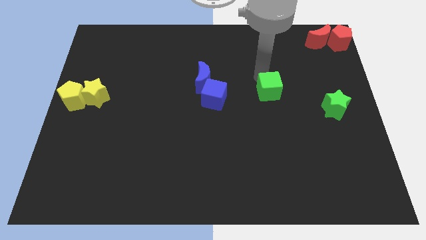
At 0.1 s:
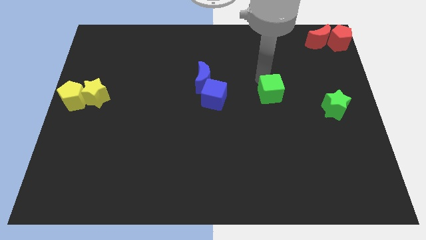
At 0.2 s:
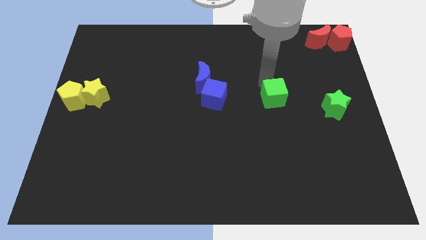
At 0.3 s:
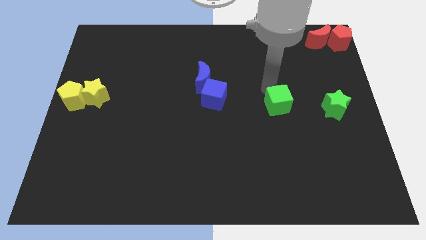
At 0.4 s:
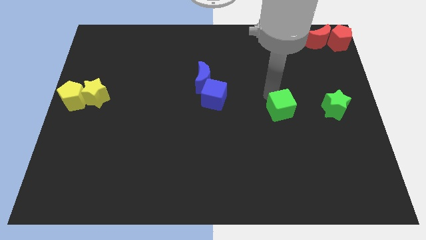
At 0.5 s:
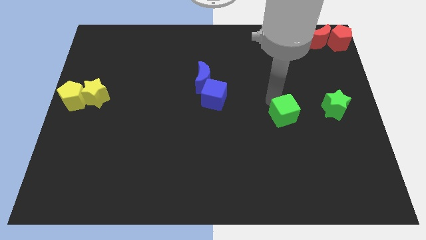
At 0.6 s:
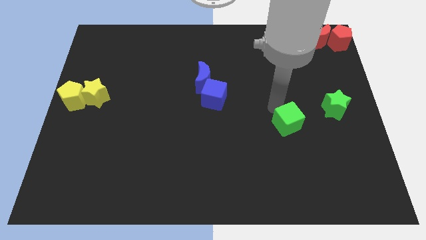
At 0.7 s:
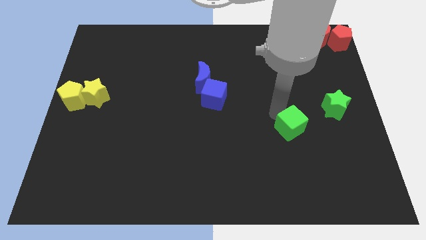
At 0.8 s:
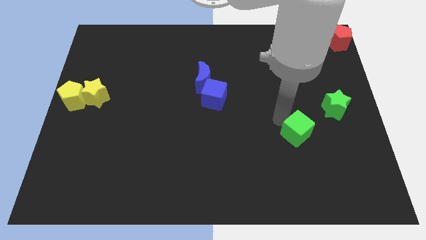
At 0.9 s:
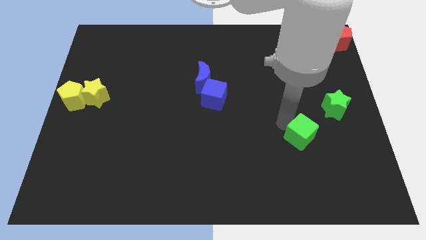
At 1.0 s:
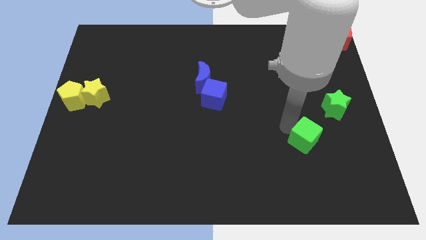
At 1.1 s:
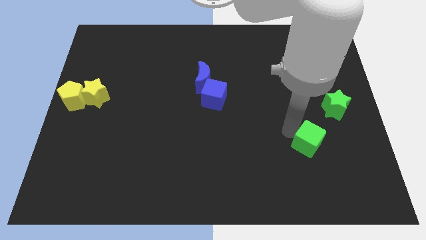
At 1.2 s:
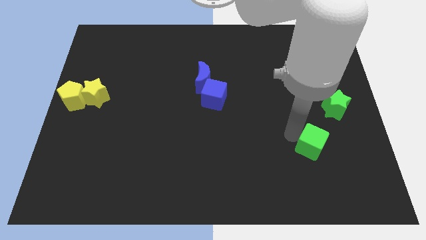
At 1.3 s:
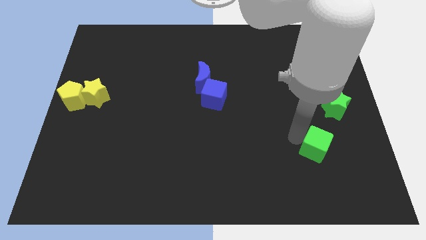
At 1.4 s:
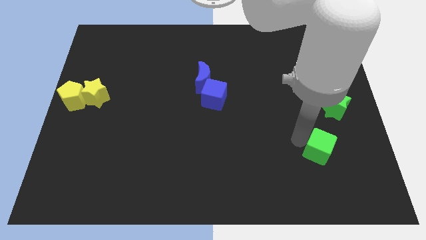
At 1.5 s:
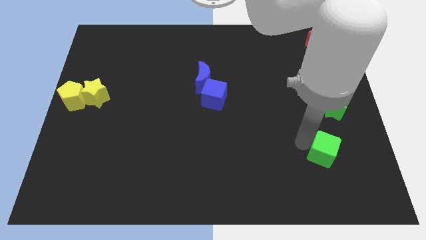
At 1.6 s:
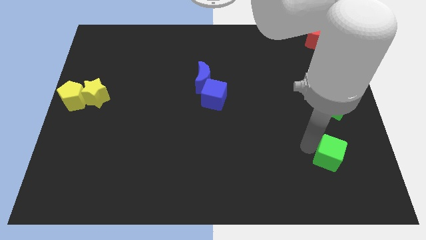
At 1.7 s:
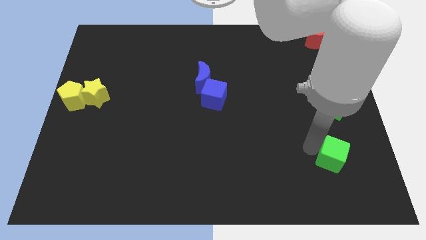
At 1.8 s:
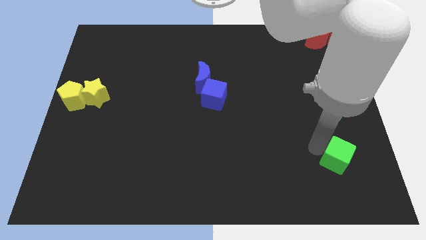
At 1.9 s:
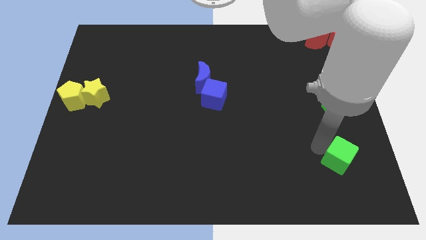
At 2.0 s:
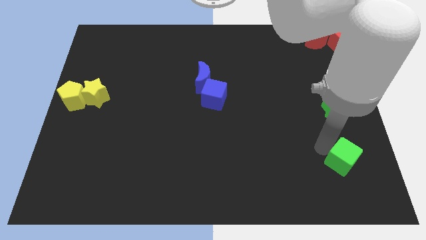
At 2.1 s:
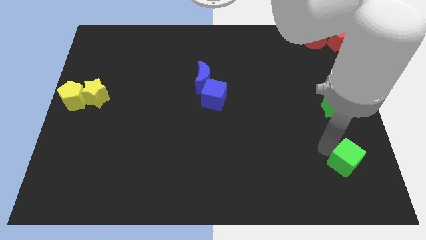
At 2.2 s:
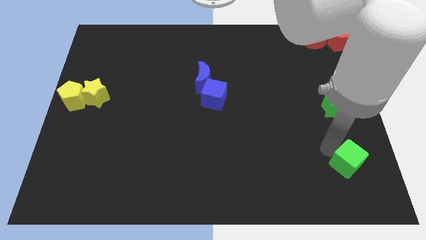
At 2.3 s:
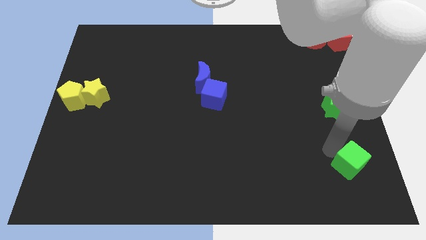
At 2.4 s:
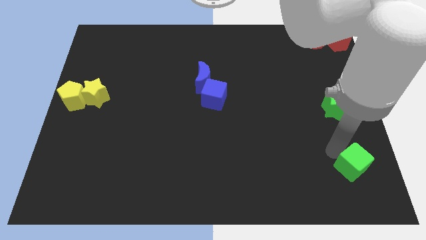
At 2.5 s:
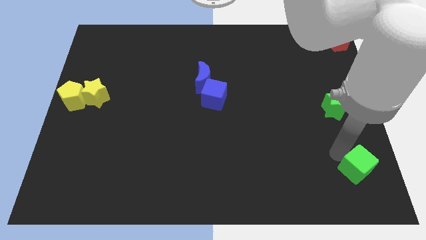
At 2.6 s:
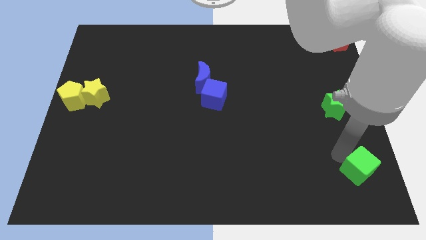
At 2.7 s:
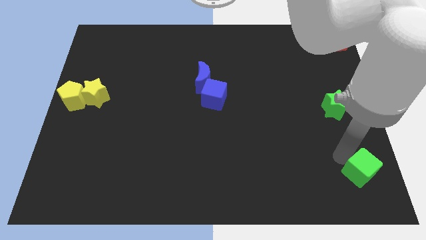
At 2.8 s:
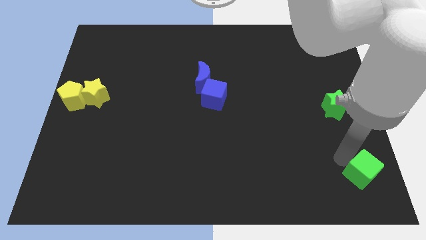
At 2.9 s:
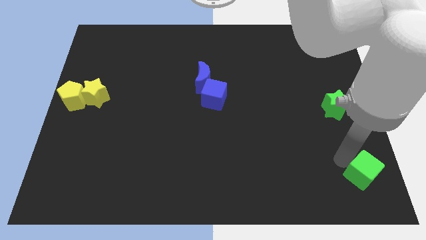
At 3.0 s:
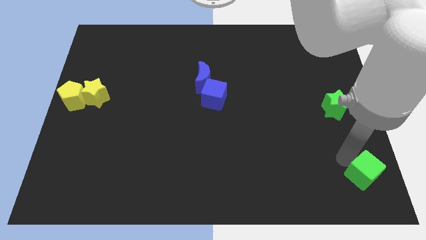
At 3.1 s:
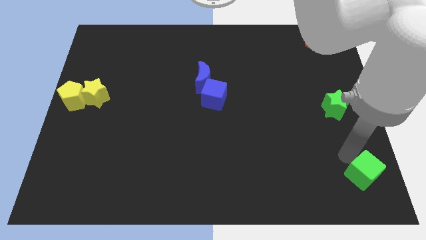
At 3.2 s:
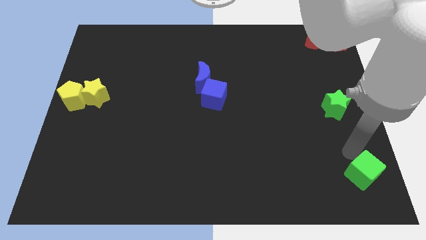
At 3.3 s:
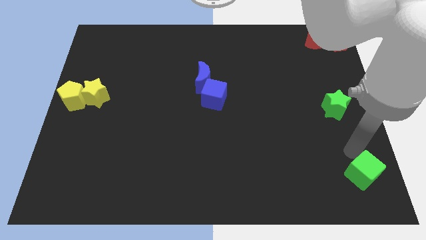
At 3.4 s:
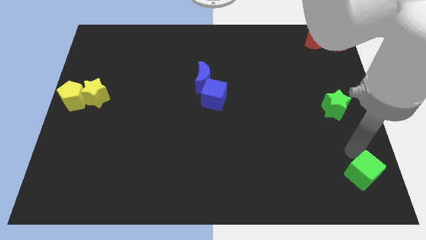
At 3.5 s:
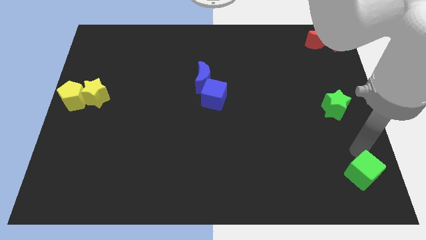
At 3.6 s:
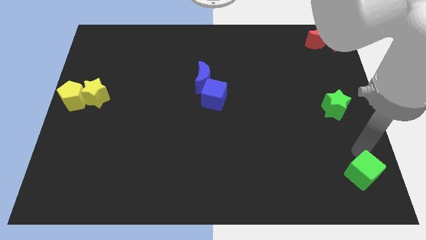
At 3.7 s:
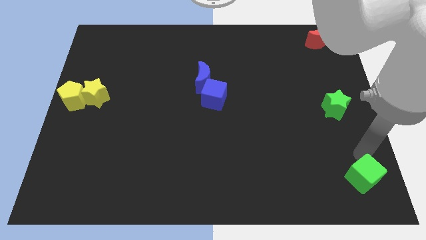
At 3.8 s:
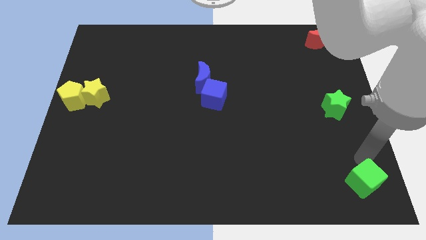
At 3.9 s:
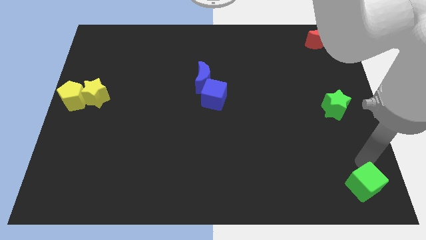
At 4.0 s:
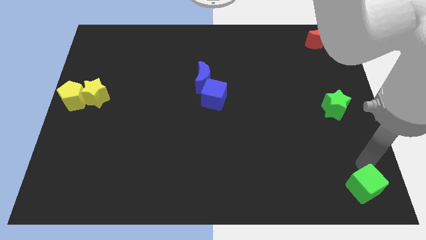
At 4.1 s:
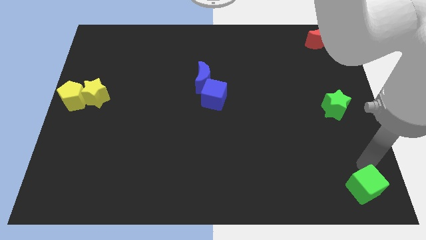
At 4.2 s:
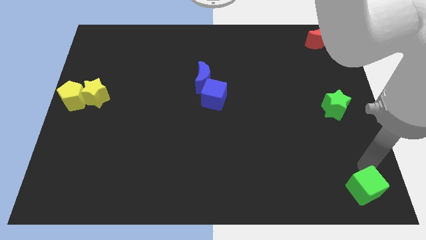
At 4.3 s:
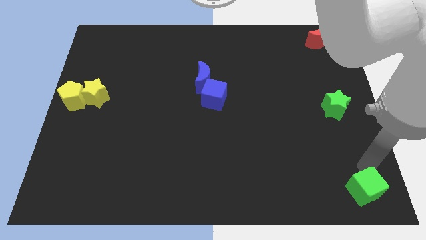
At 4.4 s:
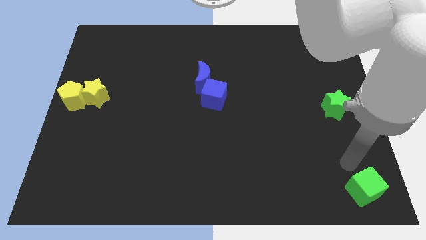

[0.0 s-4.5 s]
push the green cube to the bottom right on the board

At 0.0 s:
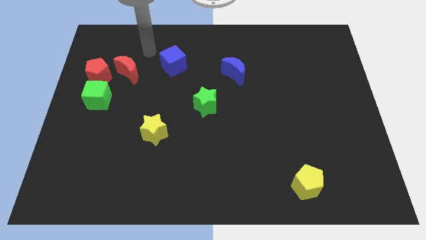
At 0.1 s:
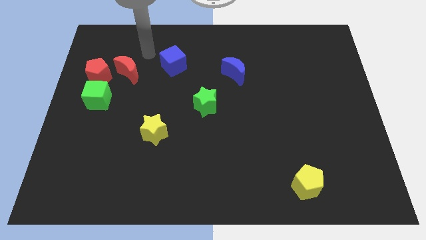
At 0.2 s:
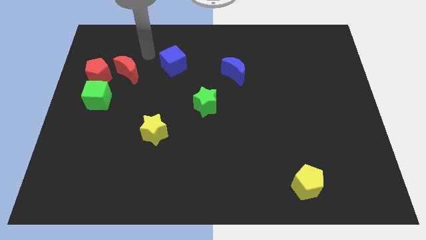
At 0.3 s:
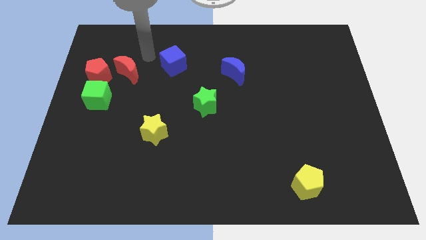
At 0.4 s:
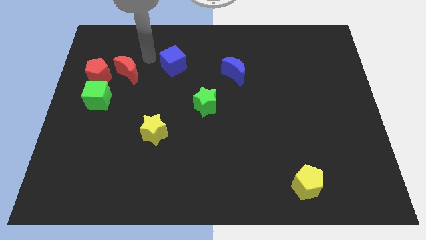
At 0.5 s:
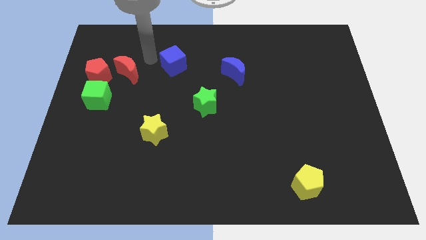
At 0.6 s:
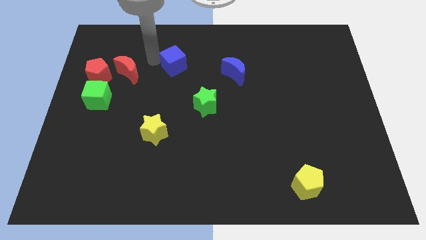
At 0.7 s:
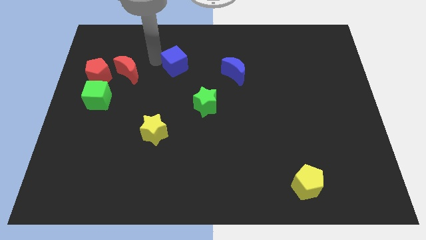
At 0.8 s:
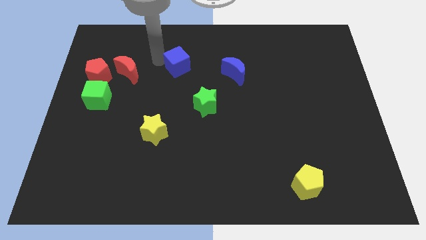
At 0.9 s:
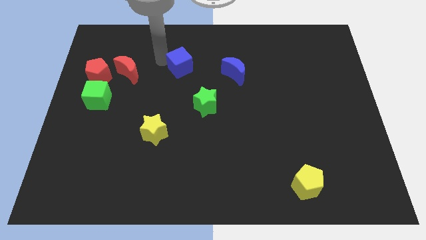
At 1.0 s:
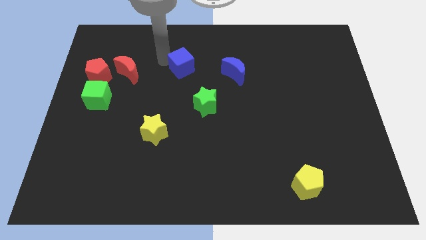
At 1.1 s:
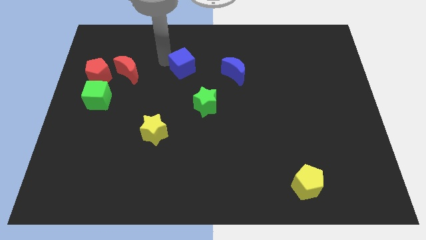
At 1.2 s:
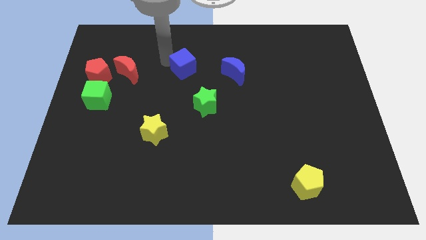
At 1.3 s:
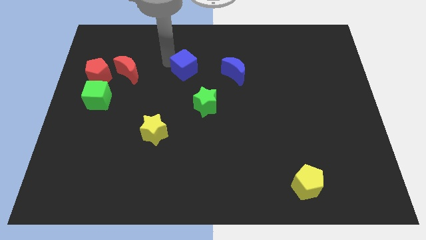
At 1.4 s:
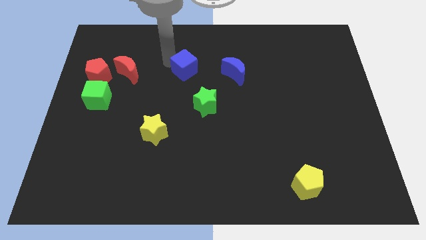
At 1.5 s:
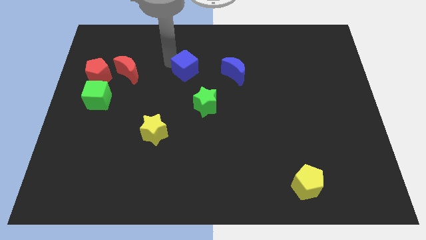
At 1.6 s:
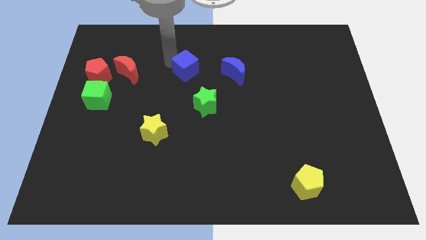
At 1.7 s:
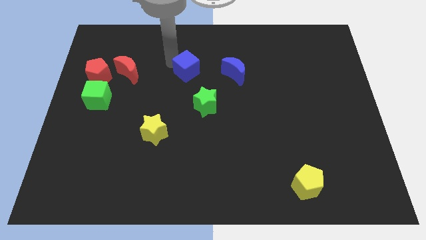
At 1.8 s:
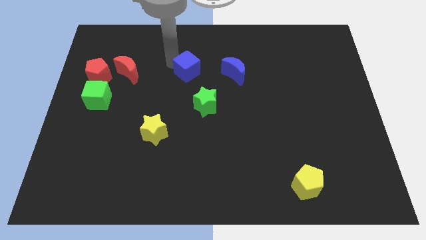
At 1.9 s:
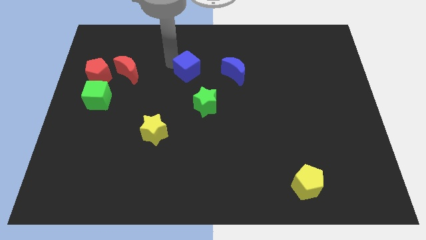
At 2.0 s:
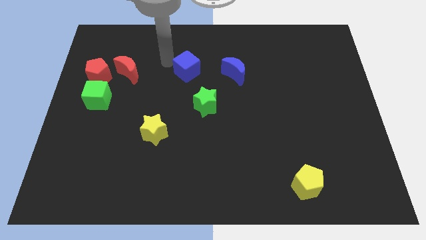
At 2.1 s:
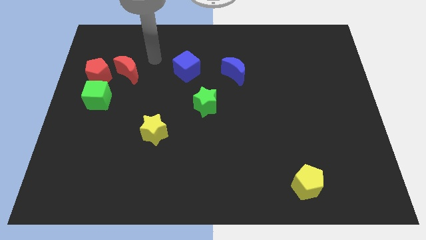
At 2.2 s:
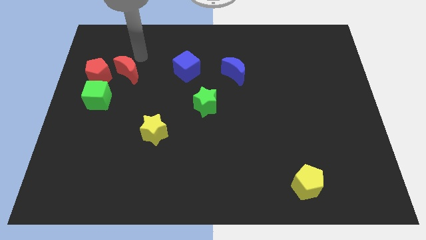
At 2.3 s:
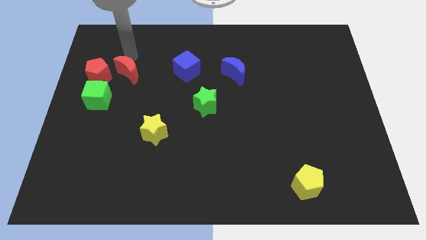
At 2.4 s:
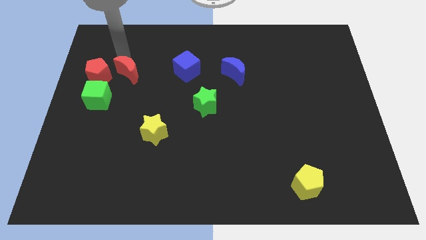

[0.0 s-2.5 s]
move the blue cube diagonally top left to the green star

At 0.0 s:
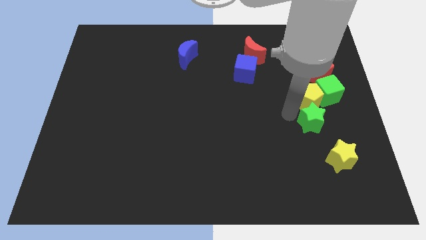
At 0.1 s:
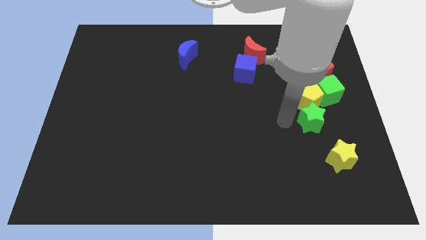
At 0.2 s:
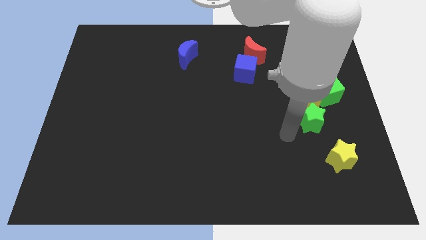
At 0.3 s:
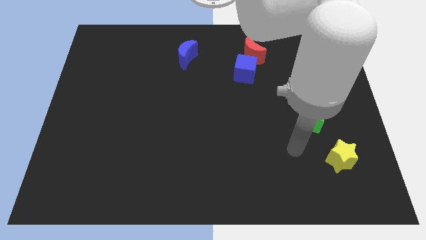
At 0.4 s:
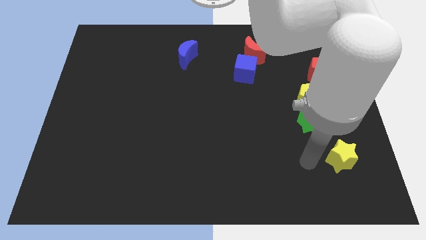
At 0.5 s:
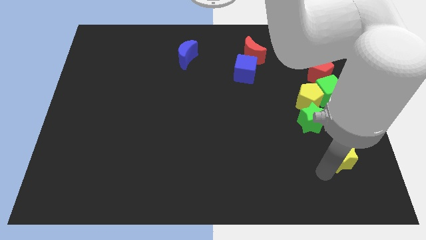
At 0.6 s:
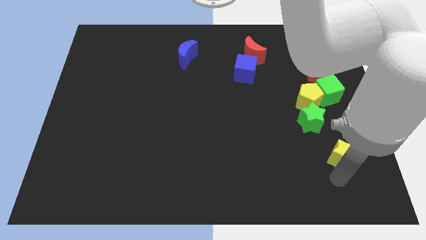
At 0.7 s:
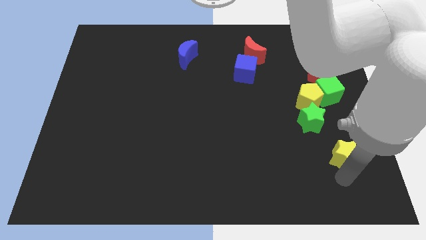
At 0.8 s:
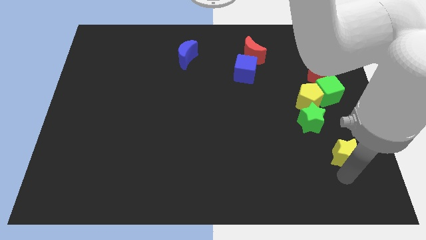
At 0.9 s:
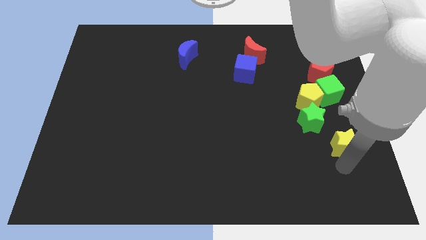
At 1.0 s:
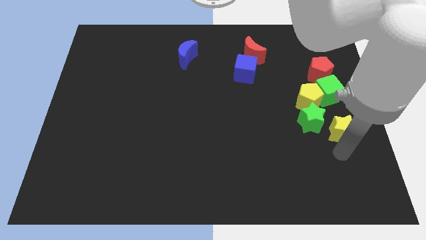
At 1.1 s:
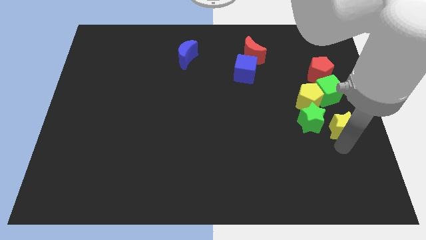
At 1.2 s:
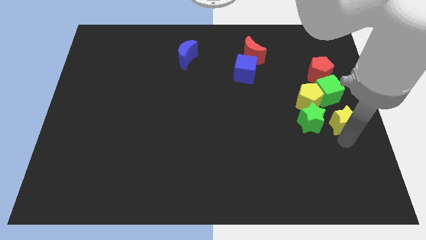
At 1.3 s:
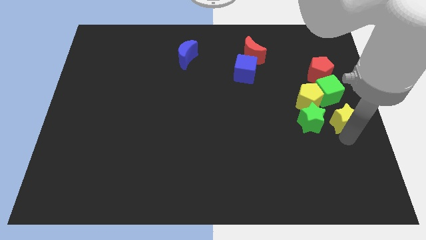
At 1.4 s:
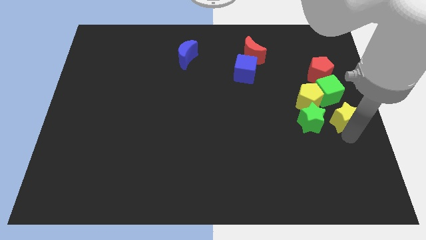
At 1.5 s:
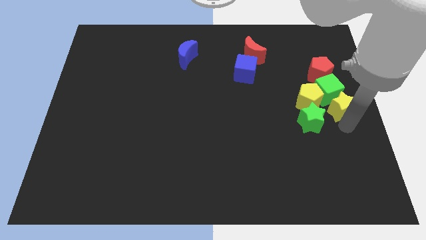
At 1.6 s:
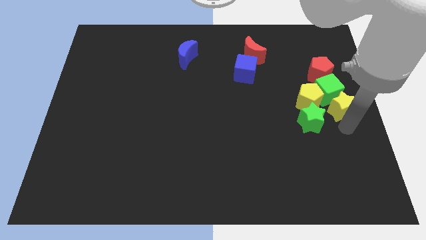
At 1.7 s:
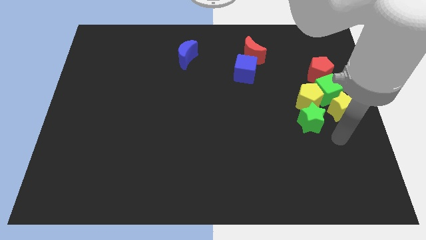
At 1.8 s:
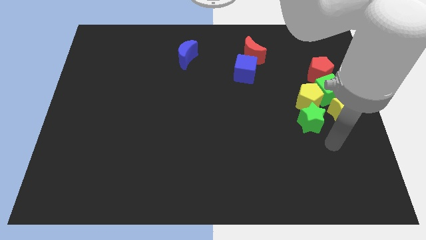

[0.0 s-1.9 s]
make a group of yellow and green blocks

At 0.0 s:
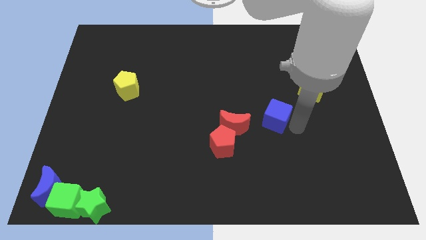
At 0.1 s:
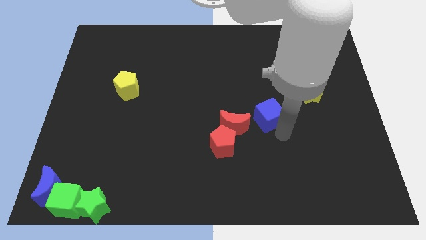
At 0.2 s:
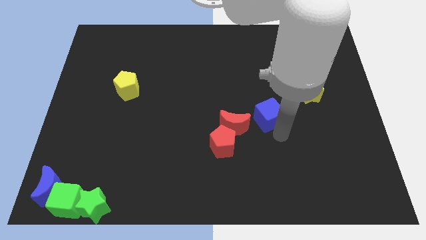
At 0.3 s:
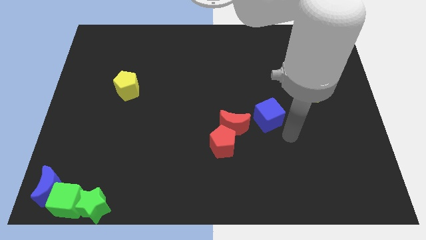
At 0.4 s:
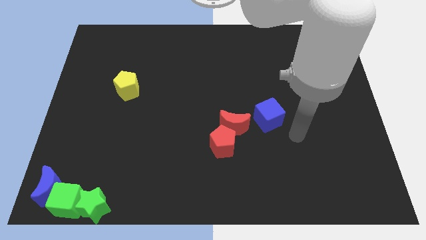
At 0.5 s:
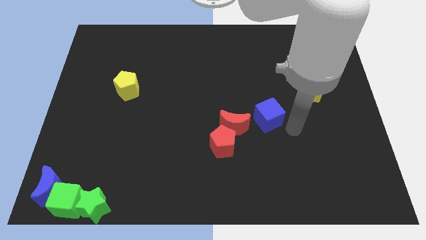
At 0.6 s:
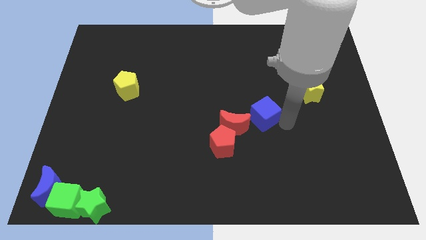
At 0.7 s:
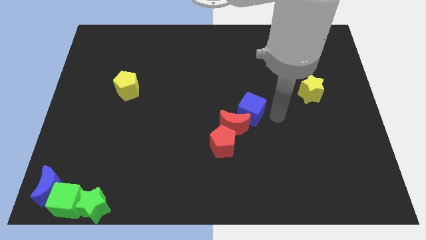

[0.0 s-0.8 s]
place the blue cube in between the red crescent and yellow star
